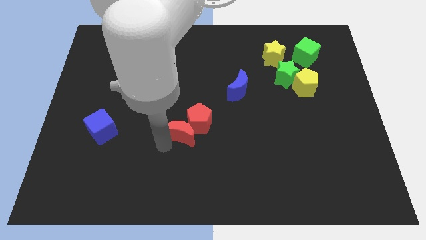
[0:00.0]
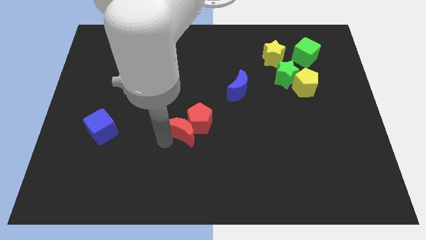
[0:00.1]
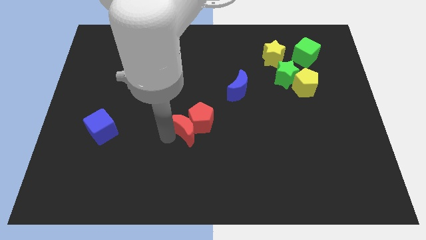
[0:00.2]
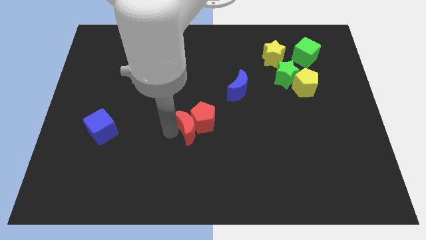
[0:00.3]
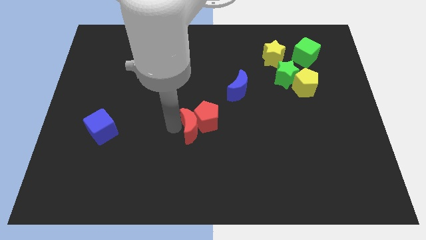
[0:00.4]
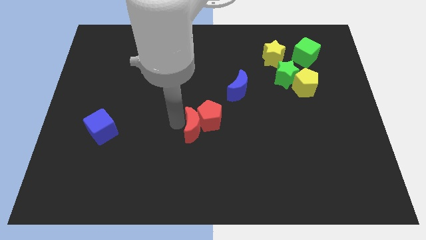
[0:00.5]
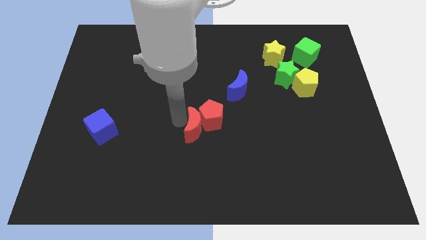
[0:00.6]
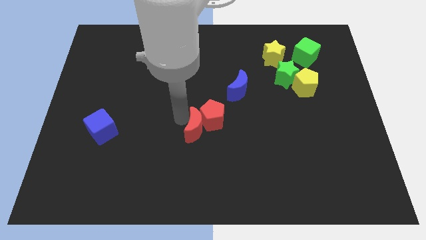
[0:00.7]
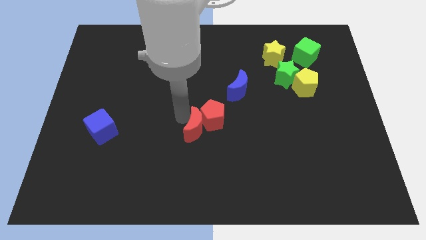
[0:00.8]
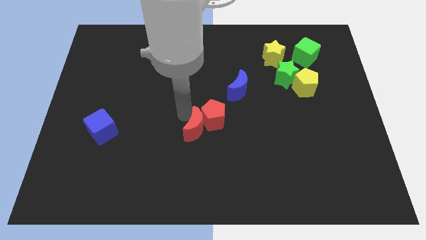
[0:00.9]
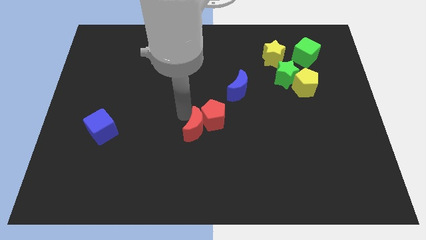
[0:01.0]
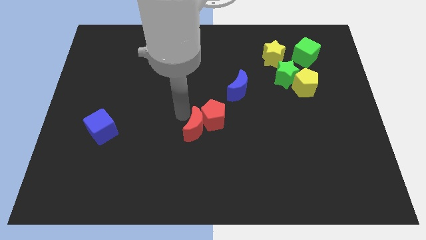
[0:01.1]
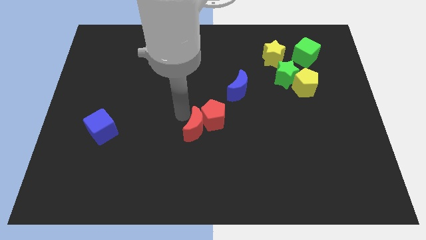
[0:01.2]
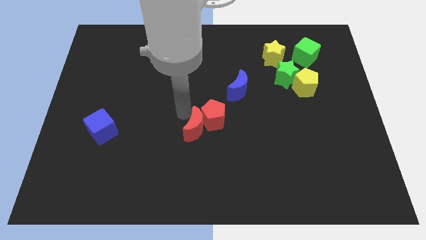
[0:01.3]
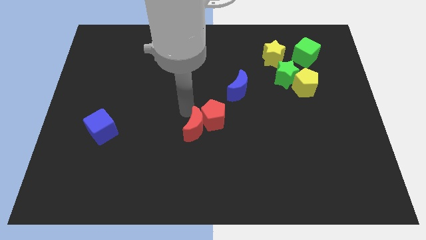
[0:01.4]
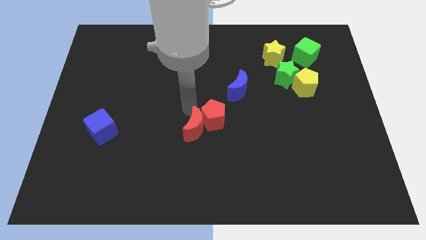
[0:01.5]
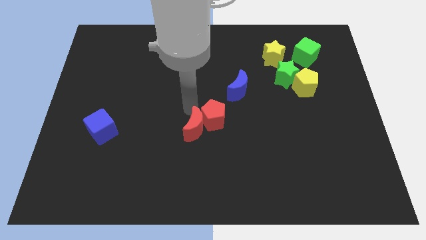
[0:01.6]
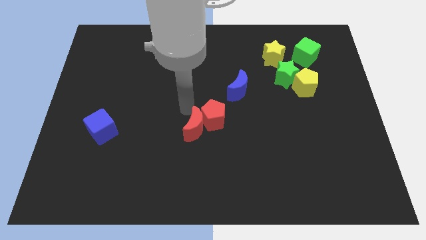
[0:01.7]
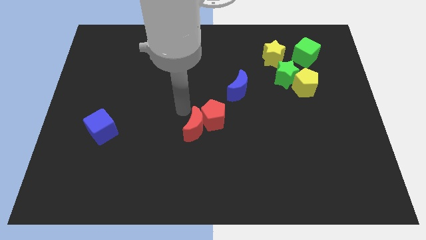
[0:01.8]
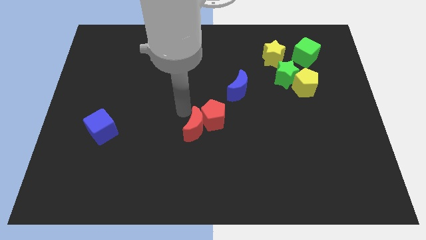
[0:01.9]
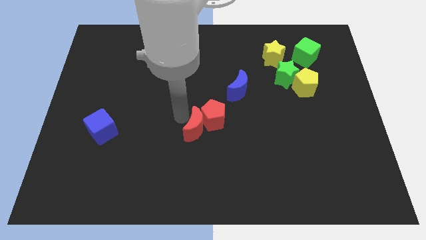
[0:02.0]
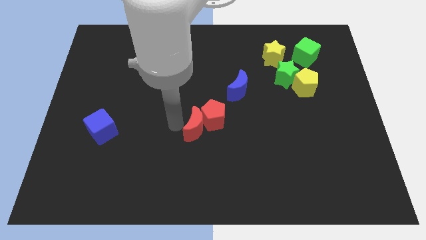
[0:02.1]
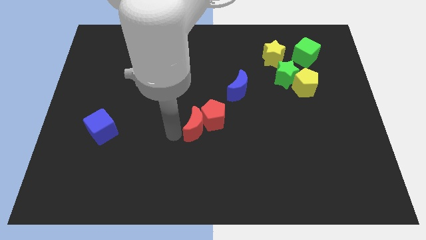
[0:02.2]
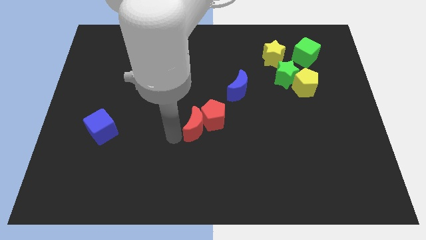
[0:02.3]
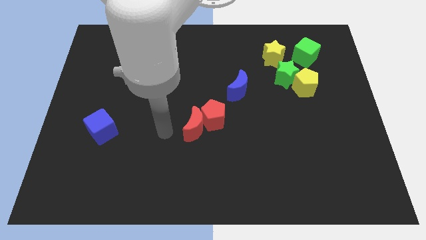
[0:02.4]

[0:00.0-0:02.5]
move red crescent towards center

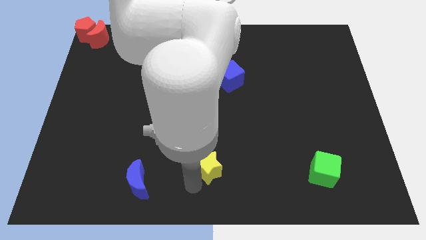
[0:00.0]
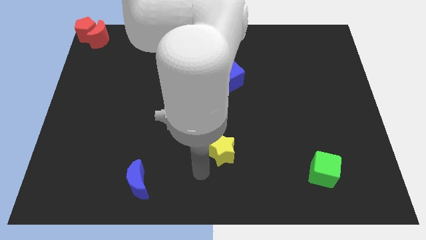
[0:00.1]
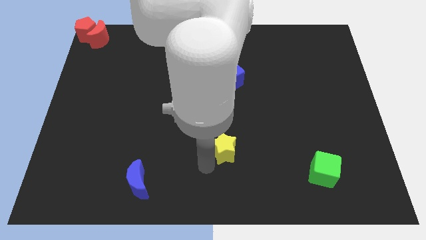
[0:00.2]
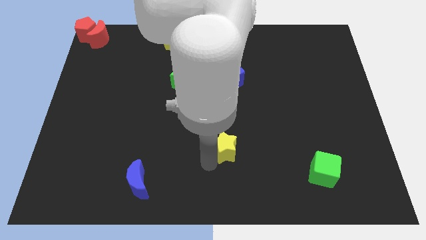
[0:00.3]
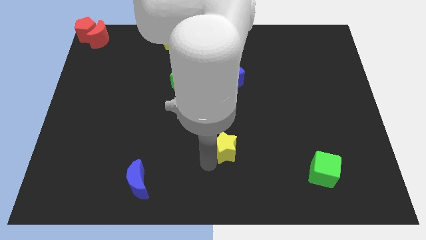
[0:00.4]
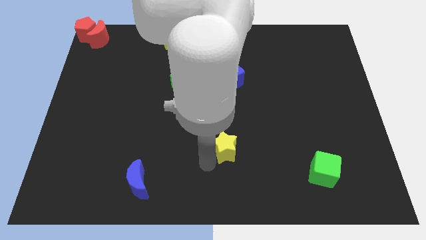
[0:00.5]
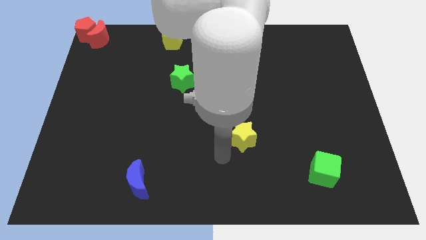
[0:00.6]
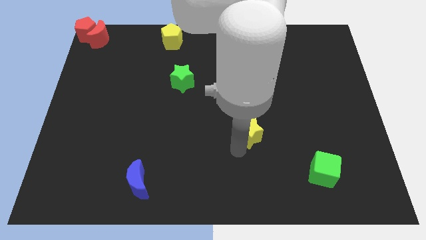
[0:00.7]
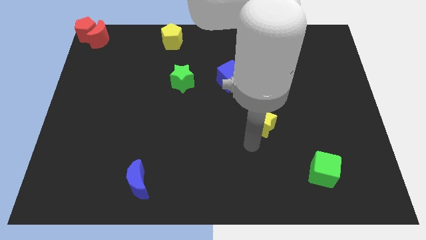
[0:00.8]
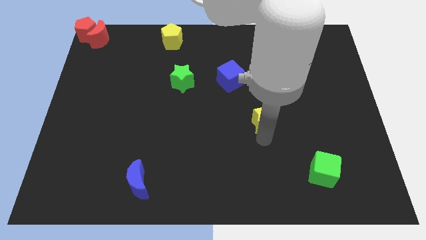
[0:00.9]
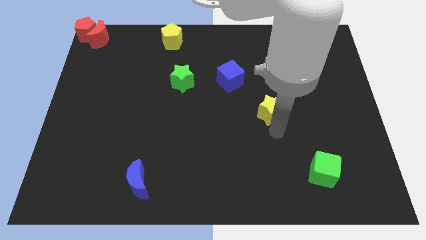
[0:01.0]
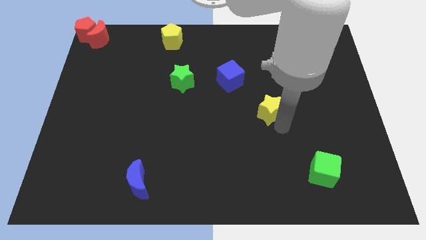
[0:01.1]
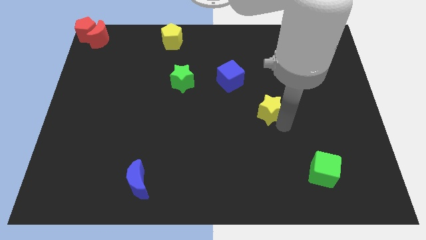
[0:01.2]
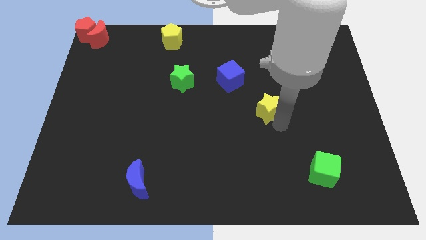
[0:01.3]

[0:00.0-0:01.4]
put the yellow star between the blue cube and green cube

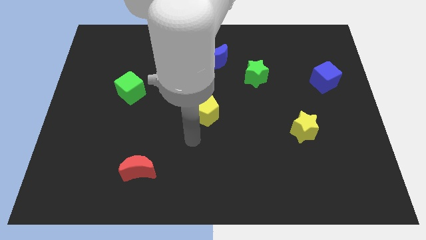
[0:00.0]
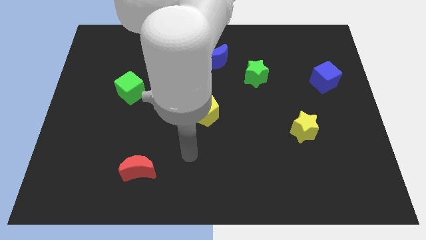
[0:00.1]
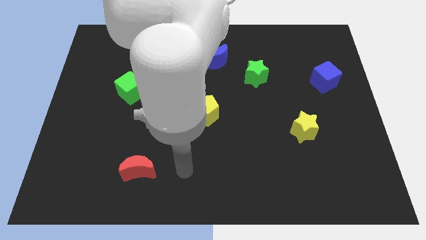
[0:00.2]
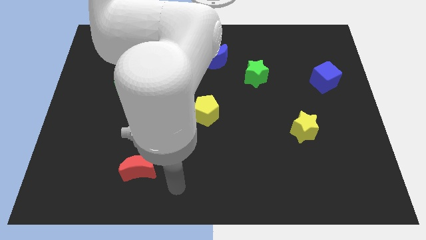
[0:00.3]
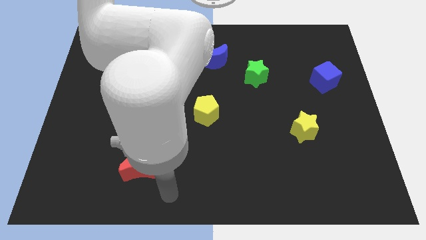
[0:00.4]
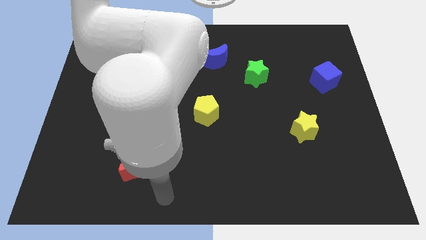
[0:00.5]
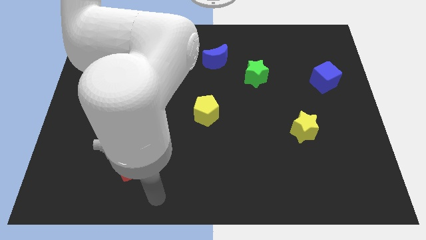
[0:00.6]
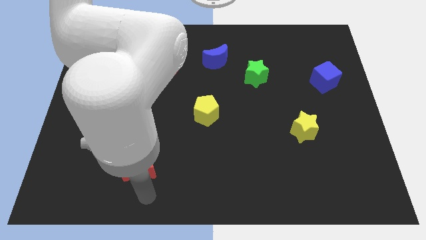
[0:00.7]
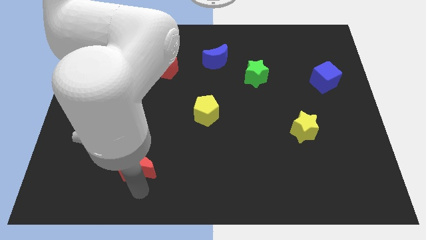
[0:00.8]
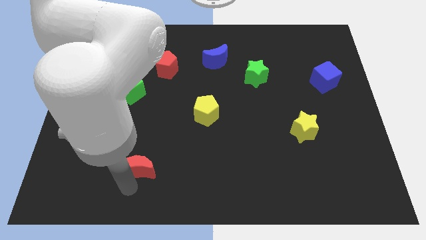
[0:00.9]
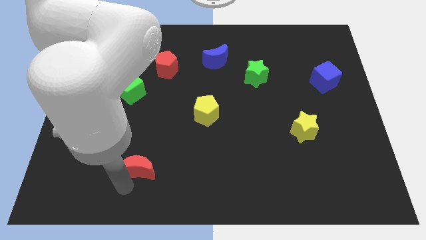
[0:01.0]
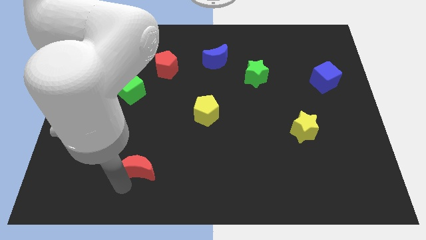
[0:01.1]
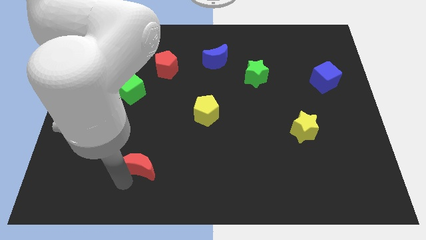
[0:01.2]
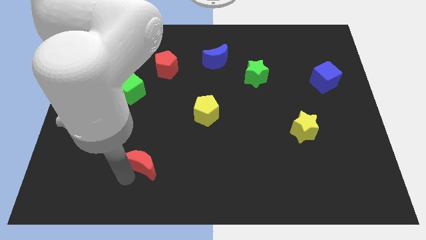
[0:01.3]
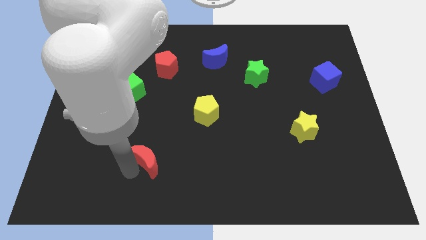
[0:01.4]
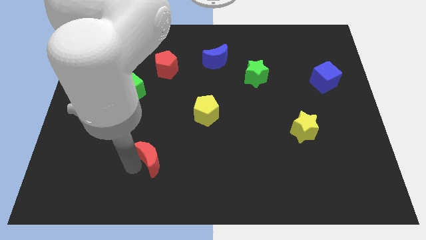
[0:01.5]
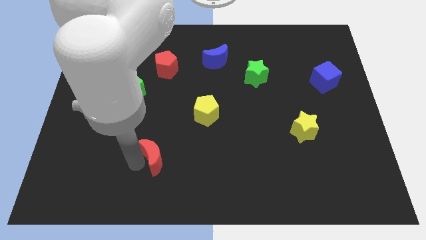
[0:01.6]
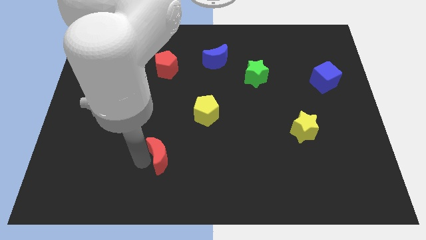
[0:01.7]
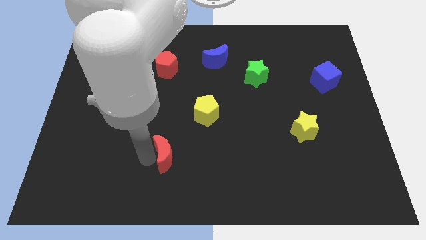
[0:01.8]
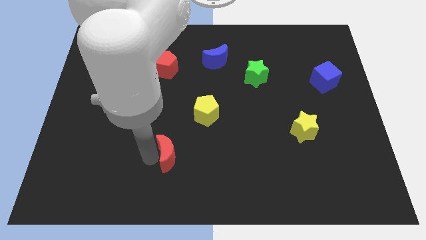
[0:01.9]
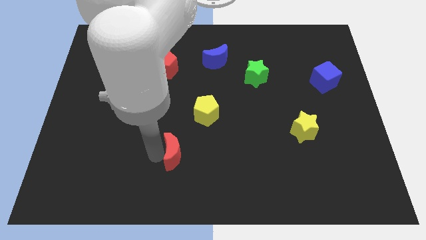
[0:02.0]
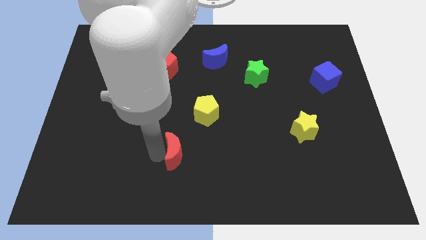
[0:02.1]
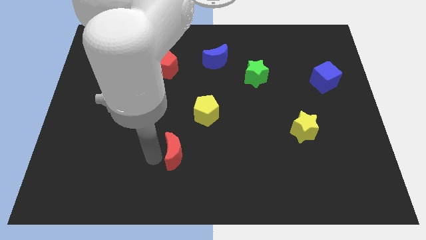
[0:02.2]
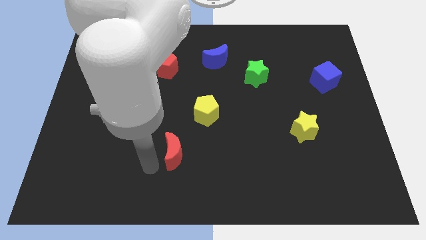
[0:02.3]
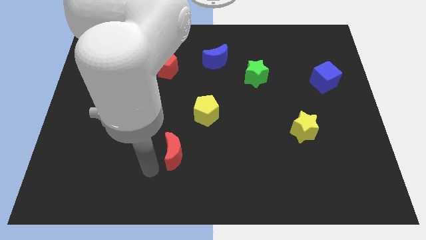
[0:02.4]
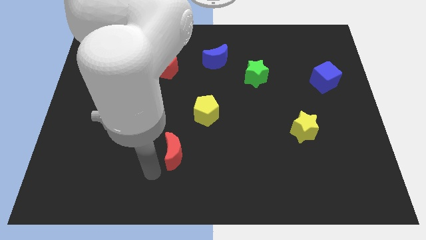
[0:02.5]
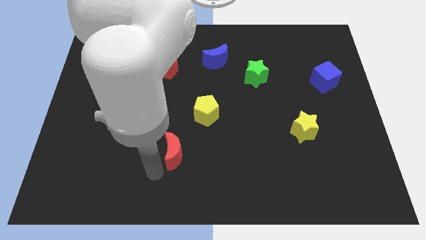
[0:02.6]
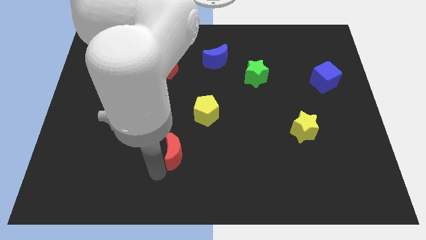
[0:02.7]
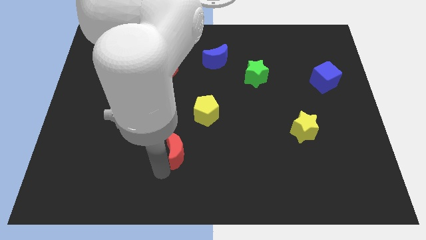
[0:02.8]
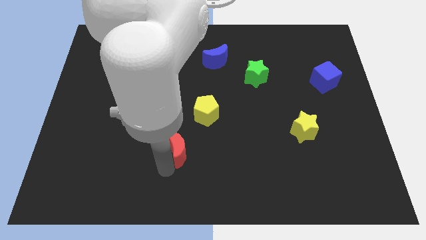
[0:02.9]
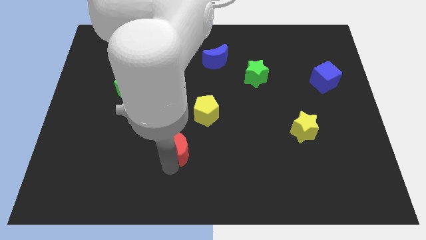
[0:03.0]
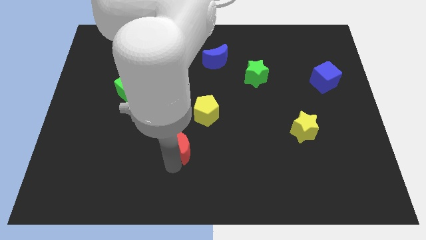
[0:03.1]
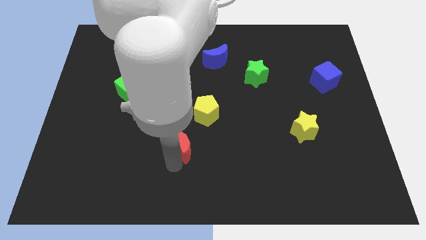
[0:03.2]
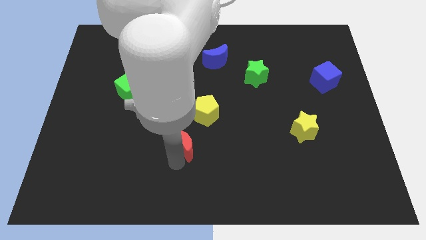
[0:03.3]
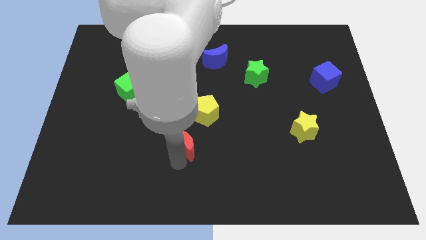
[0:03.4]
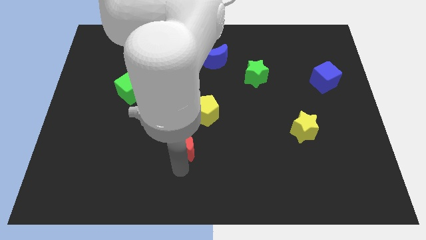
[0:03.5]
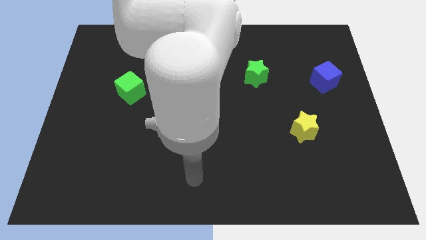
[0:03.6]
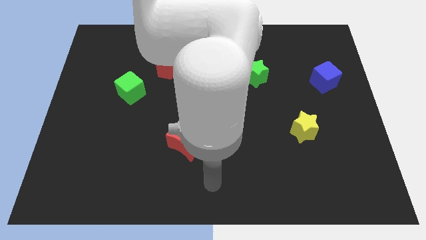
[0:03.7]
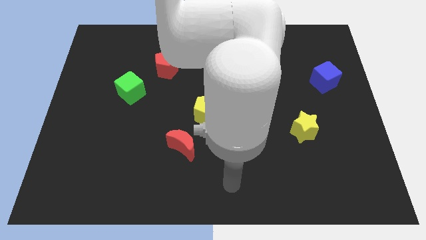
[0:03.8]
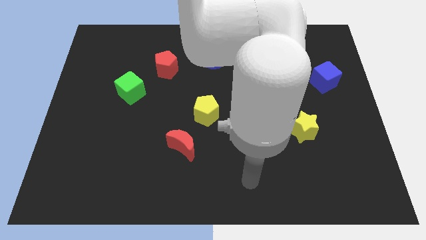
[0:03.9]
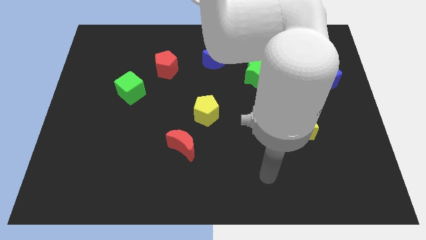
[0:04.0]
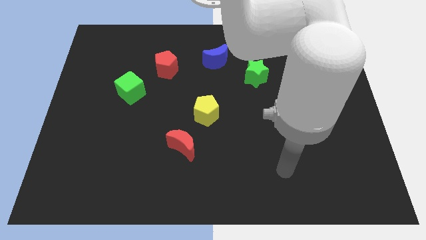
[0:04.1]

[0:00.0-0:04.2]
push the red crescent to the bottom left of the yellow pentagon

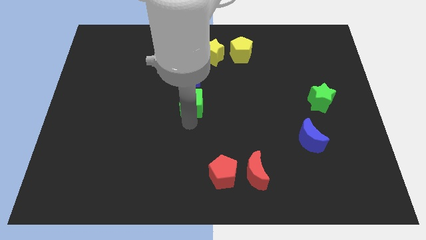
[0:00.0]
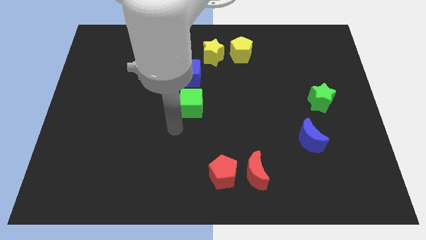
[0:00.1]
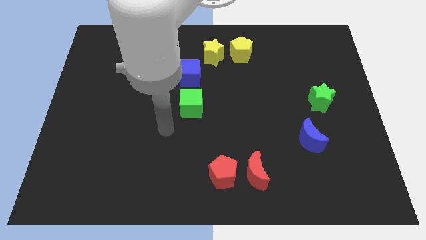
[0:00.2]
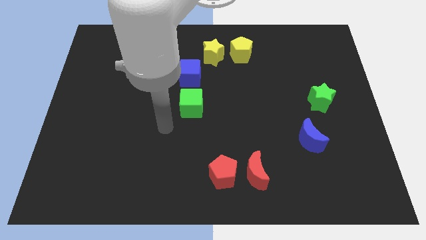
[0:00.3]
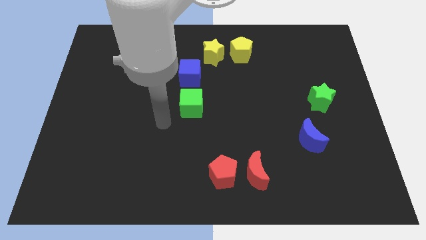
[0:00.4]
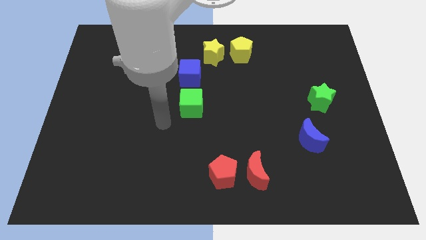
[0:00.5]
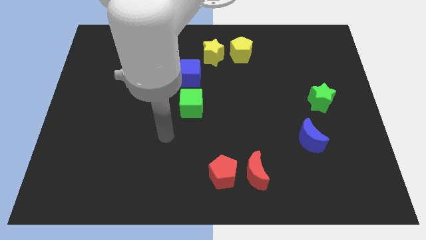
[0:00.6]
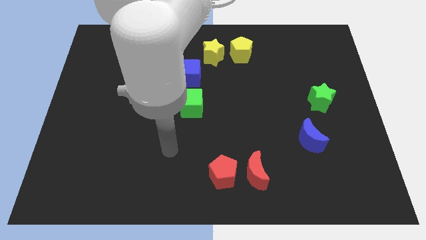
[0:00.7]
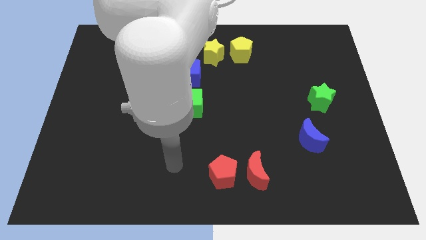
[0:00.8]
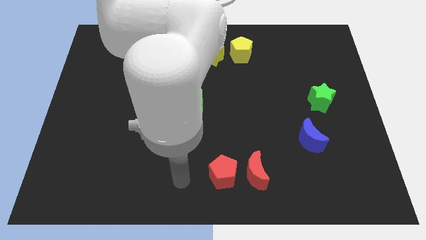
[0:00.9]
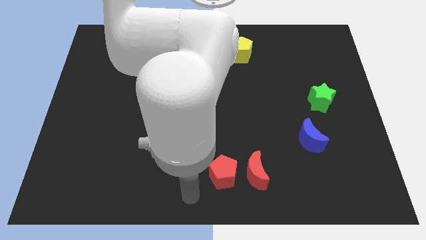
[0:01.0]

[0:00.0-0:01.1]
move your arm away from green cube
